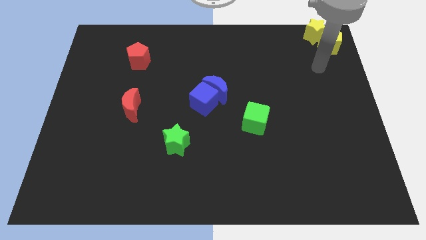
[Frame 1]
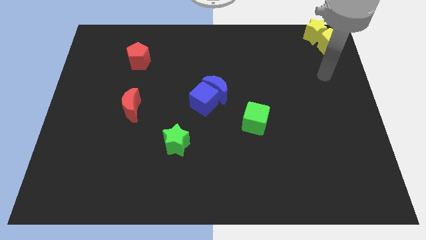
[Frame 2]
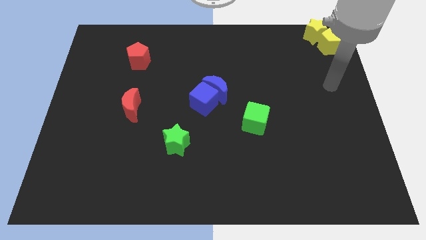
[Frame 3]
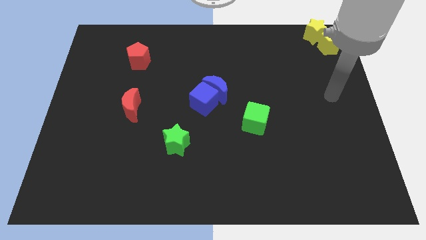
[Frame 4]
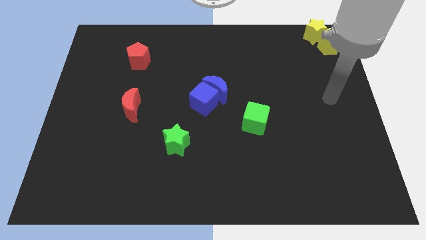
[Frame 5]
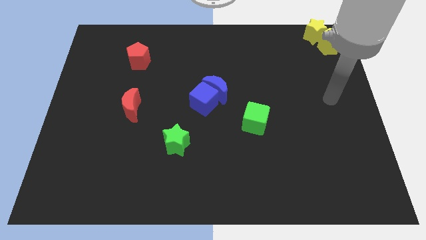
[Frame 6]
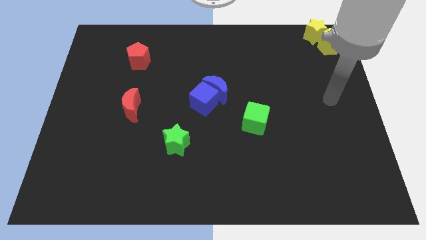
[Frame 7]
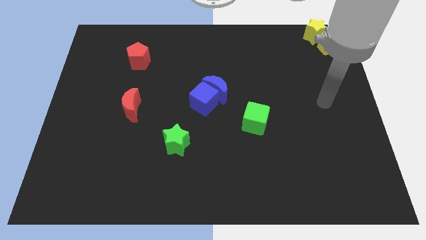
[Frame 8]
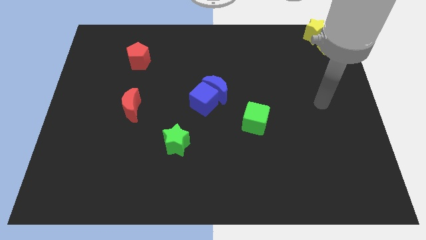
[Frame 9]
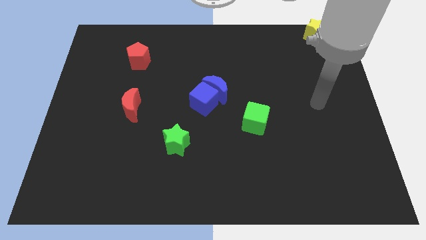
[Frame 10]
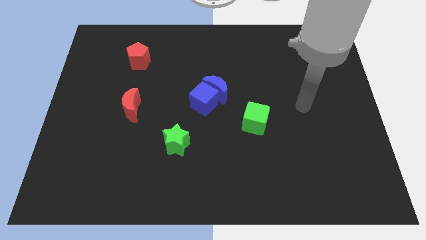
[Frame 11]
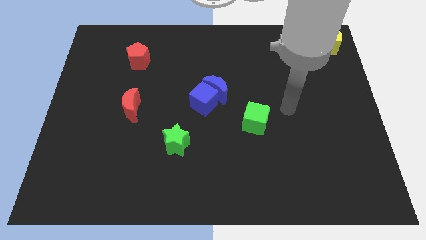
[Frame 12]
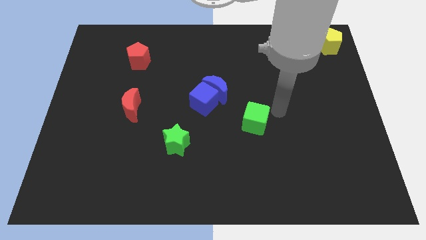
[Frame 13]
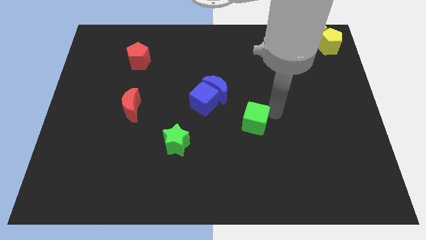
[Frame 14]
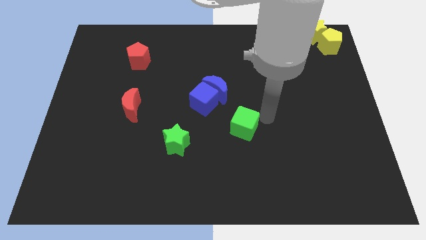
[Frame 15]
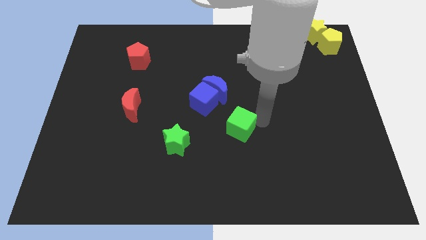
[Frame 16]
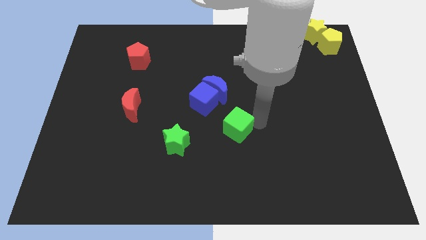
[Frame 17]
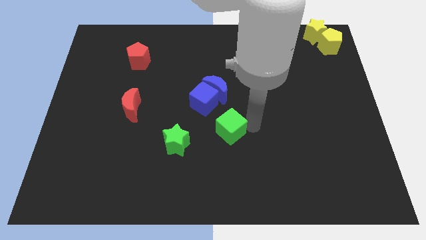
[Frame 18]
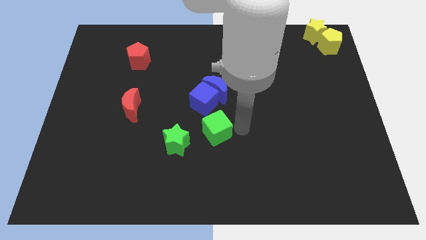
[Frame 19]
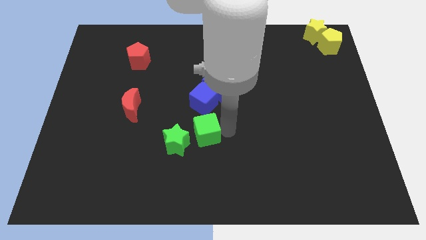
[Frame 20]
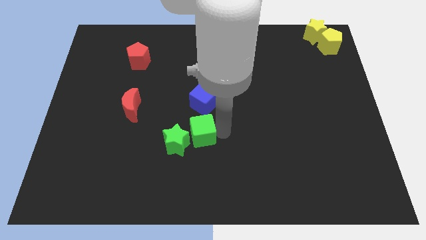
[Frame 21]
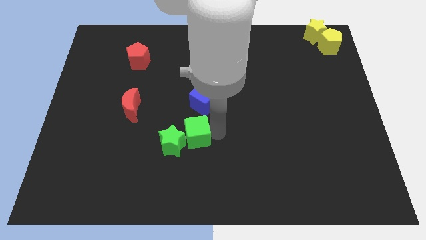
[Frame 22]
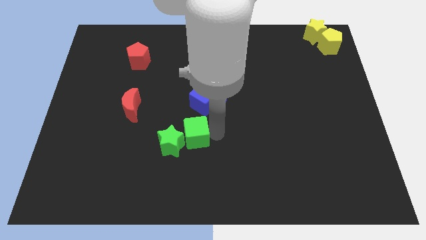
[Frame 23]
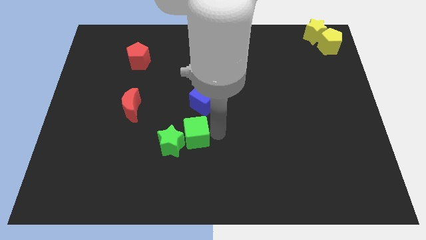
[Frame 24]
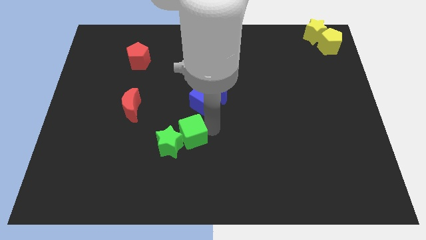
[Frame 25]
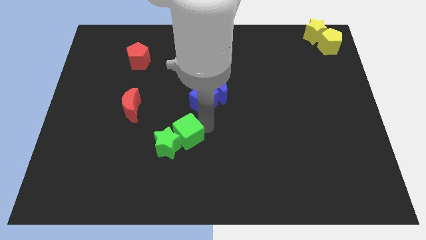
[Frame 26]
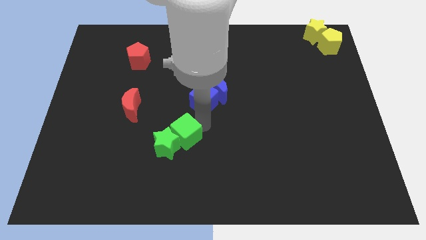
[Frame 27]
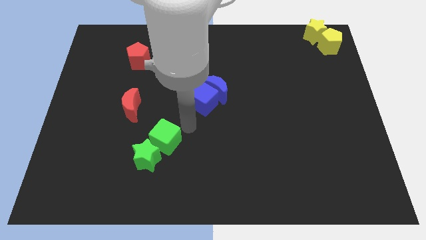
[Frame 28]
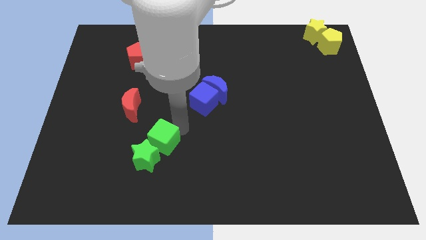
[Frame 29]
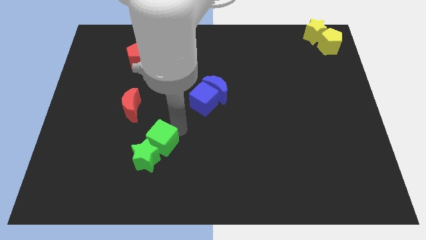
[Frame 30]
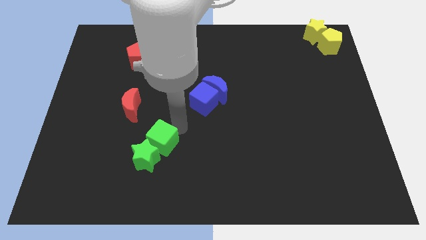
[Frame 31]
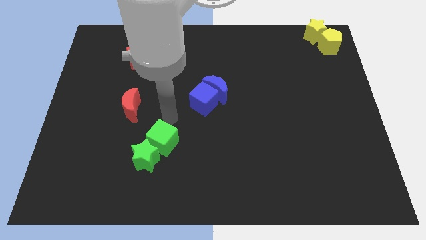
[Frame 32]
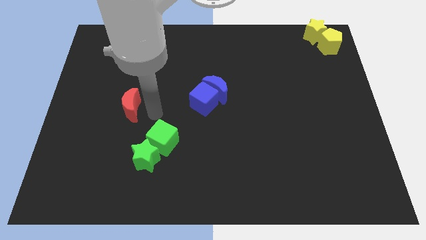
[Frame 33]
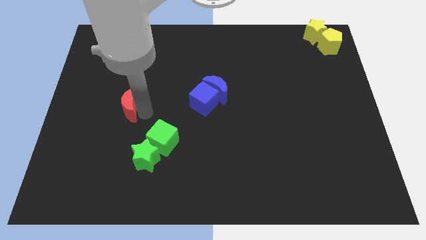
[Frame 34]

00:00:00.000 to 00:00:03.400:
move the green cube into the green star

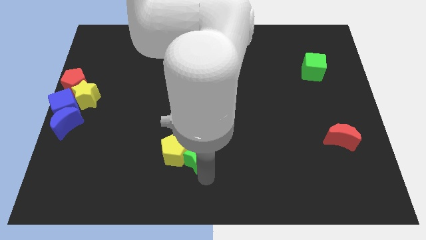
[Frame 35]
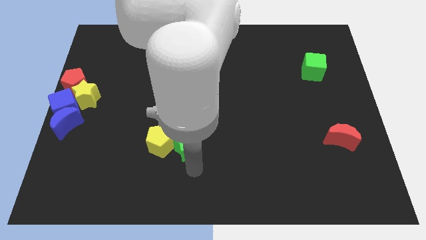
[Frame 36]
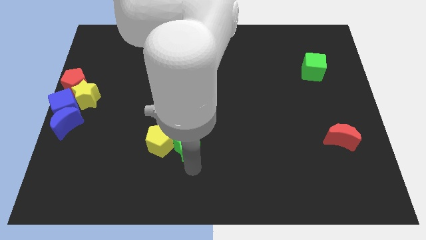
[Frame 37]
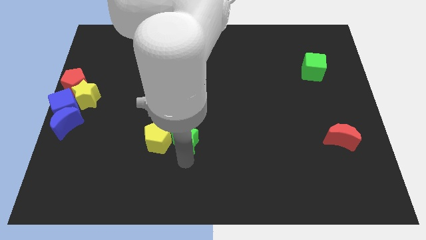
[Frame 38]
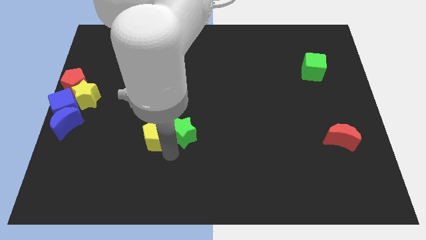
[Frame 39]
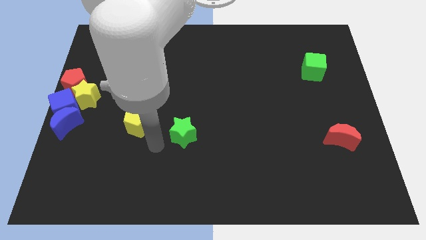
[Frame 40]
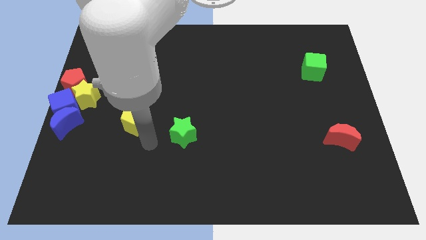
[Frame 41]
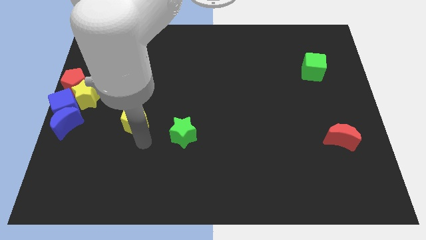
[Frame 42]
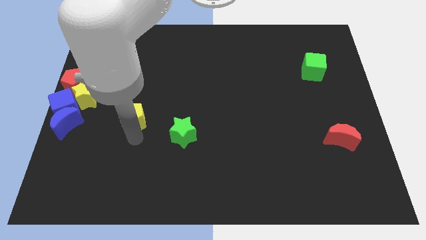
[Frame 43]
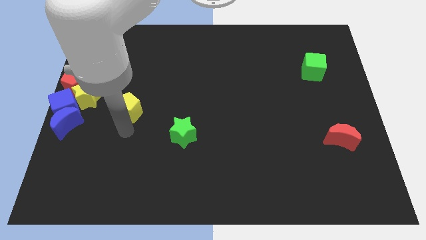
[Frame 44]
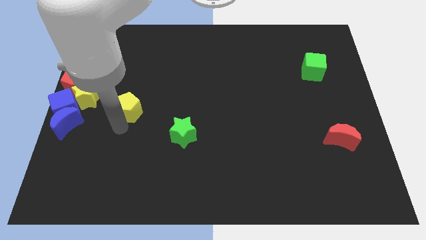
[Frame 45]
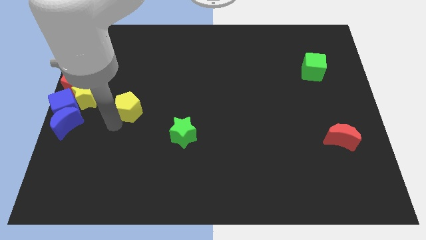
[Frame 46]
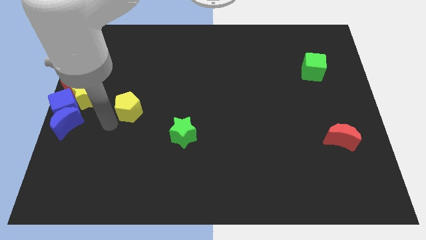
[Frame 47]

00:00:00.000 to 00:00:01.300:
separate the yellow pentagon from the green star

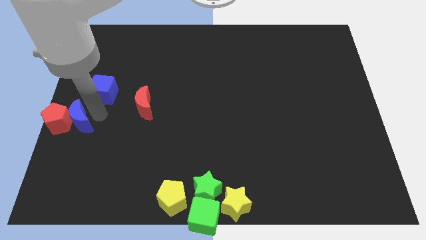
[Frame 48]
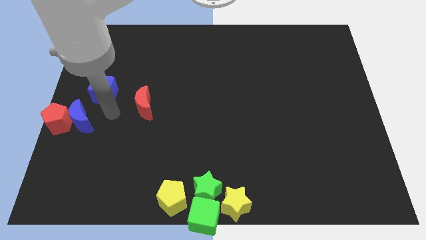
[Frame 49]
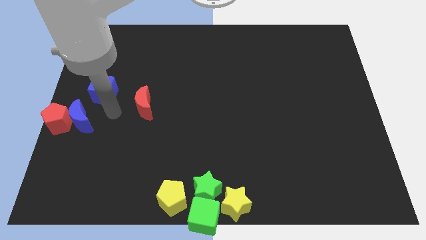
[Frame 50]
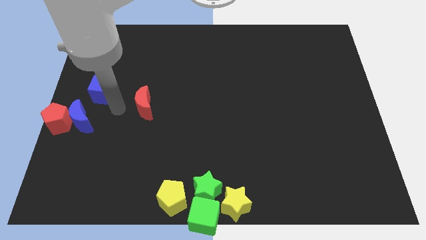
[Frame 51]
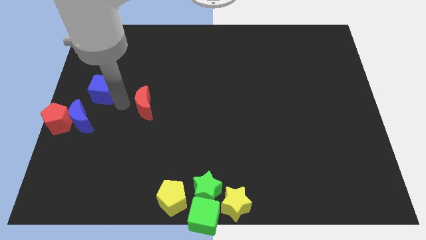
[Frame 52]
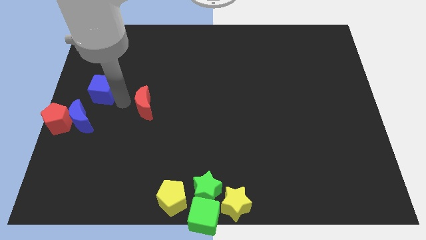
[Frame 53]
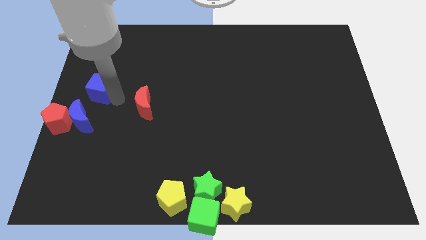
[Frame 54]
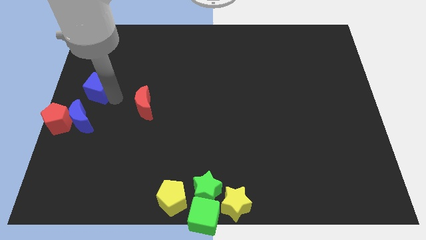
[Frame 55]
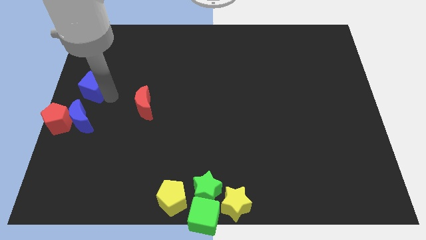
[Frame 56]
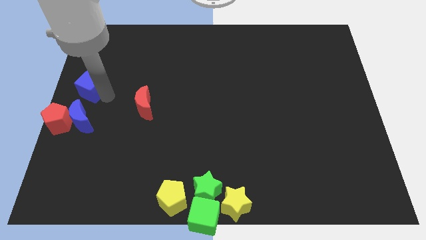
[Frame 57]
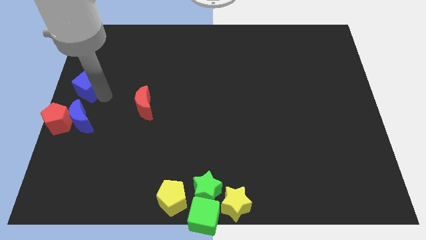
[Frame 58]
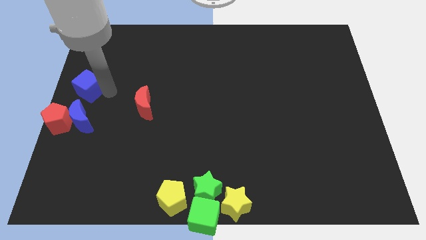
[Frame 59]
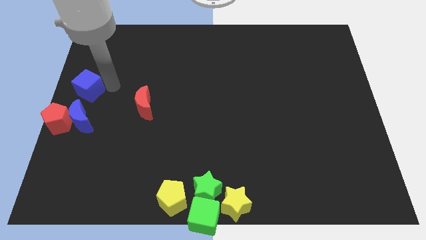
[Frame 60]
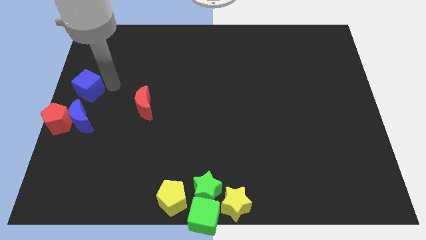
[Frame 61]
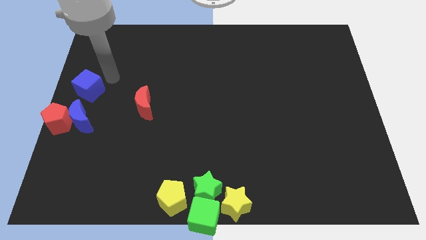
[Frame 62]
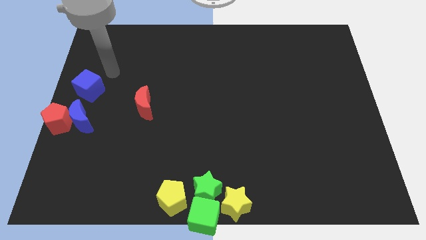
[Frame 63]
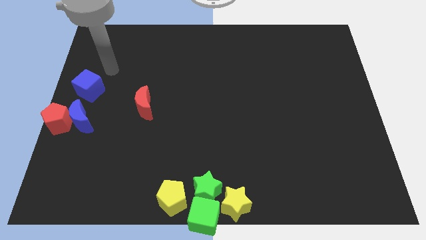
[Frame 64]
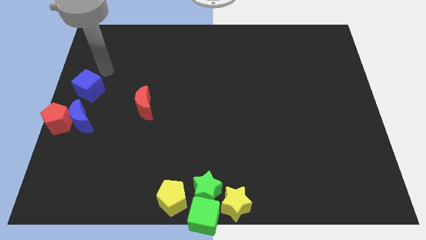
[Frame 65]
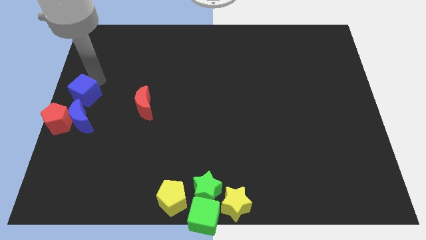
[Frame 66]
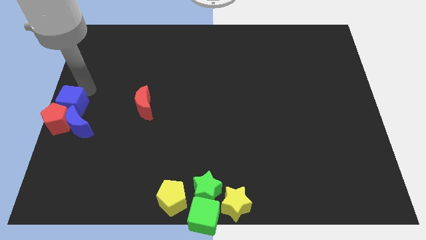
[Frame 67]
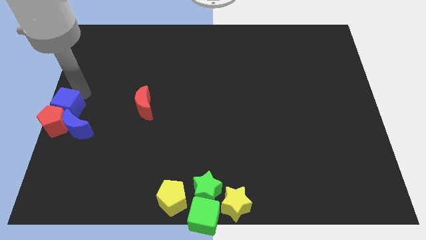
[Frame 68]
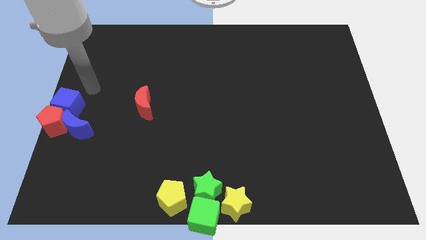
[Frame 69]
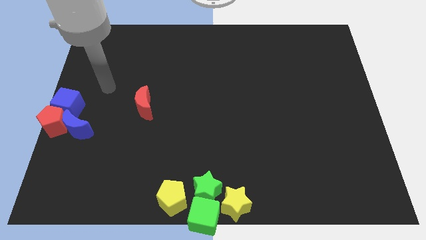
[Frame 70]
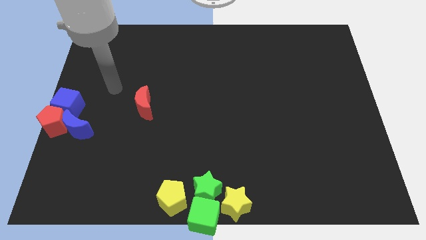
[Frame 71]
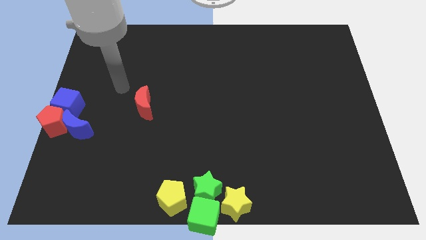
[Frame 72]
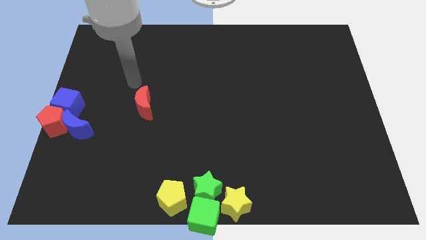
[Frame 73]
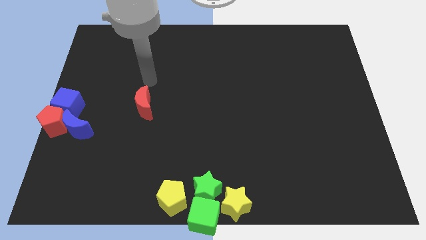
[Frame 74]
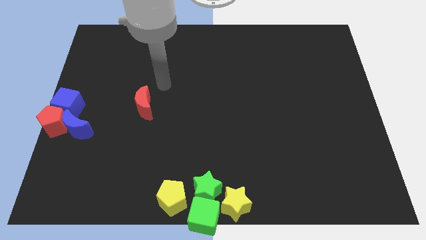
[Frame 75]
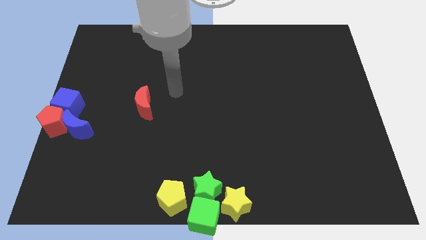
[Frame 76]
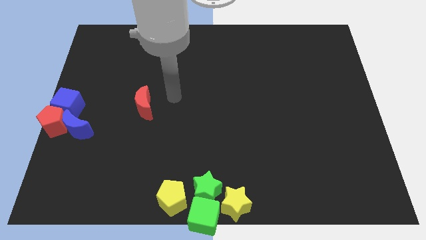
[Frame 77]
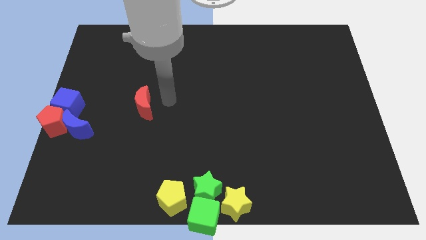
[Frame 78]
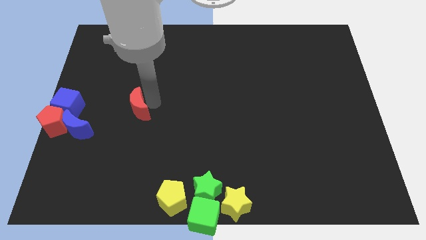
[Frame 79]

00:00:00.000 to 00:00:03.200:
make a group of red and blue blocks to the left center

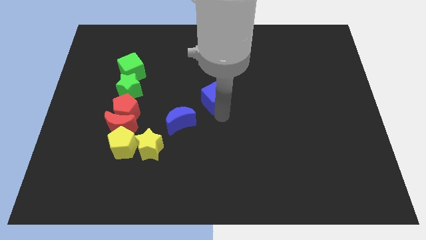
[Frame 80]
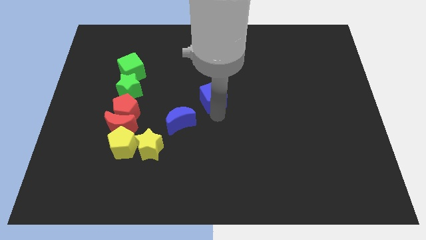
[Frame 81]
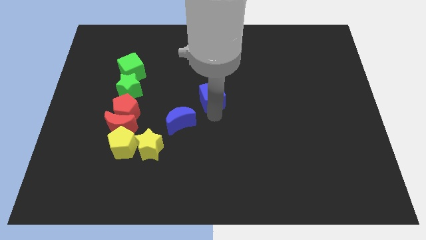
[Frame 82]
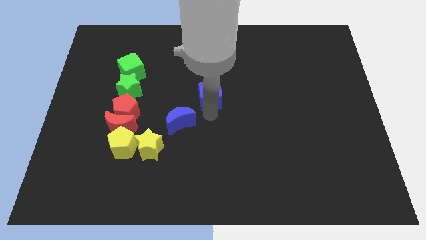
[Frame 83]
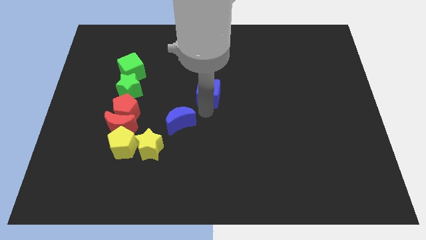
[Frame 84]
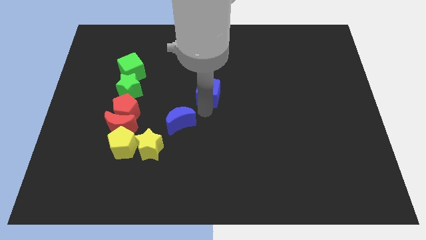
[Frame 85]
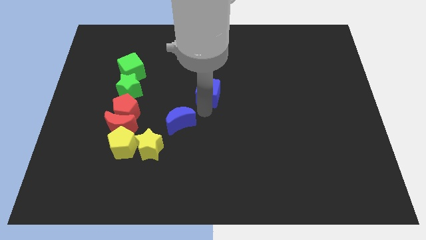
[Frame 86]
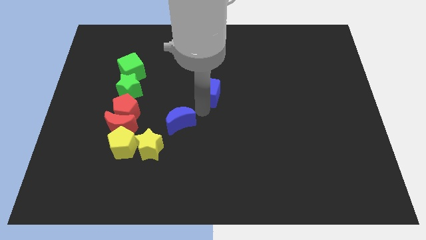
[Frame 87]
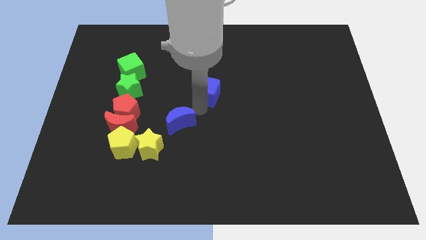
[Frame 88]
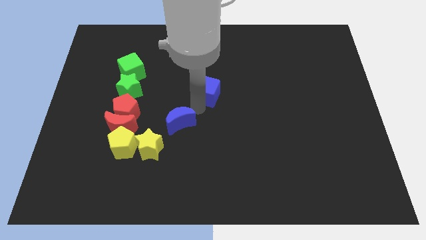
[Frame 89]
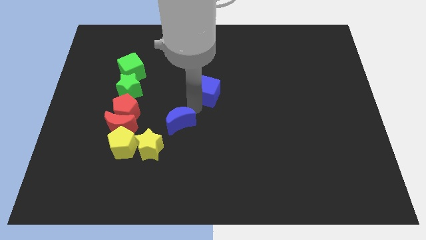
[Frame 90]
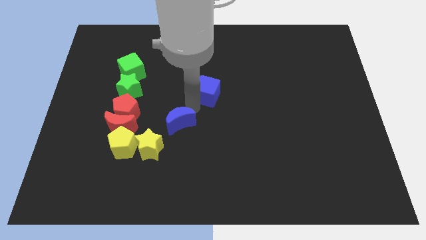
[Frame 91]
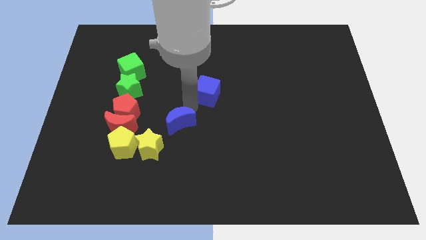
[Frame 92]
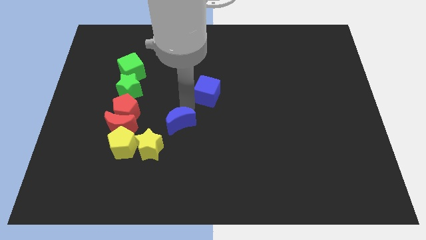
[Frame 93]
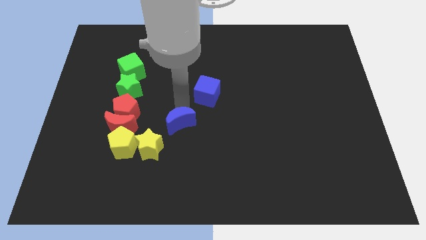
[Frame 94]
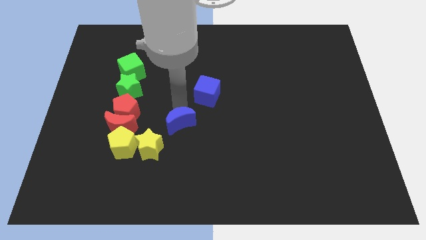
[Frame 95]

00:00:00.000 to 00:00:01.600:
touch the blue cube slightly
